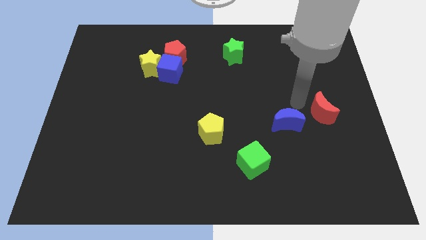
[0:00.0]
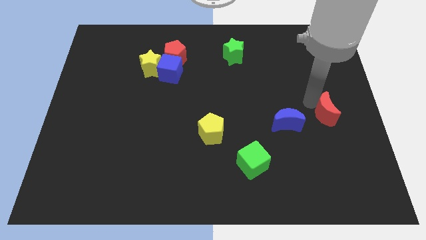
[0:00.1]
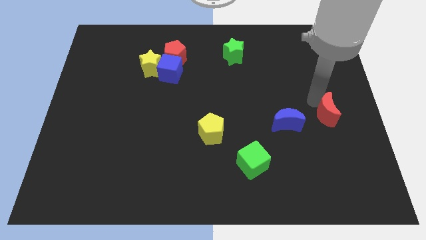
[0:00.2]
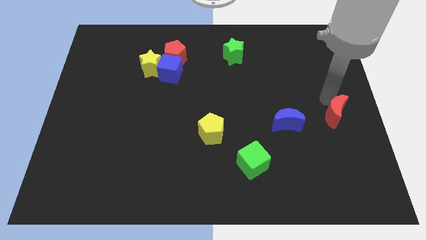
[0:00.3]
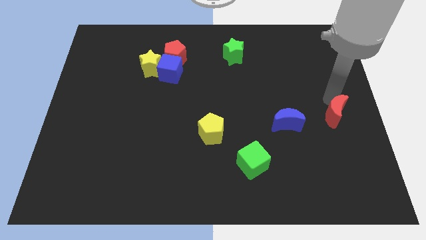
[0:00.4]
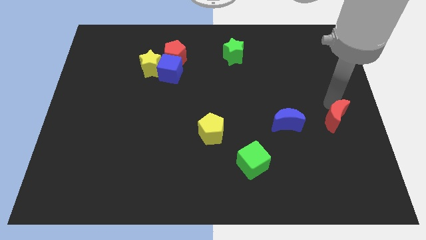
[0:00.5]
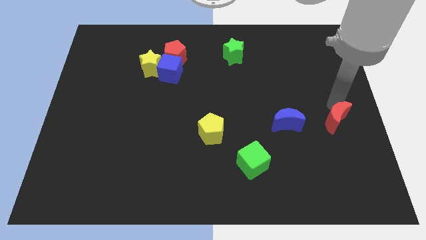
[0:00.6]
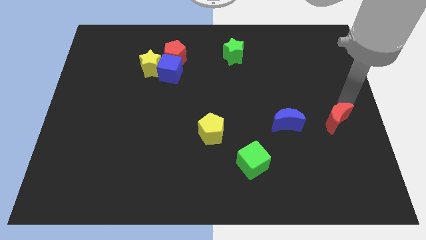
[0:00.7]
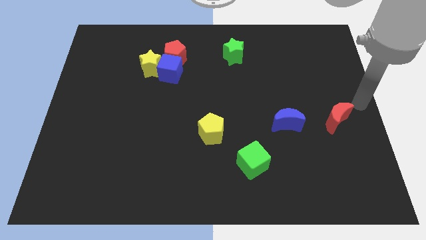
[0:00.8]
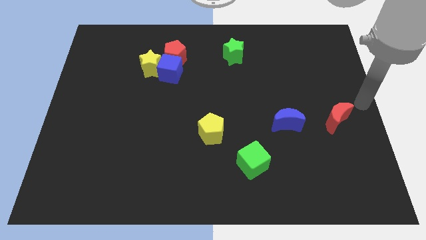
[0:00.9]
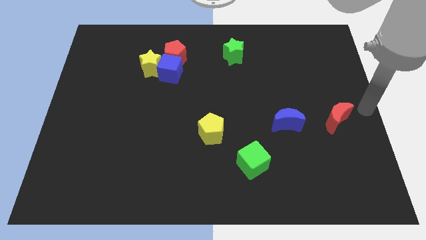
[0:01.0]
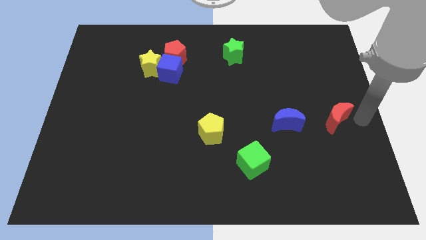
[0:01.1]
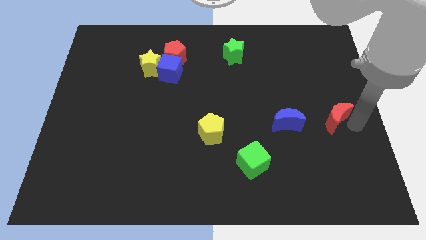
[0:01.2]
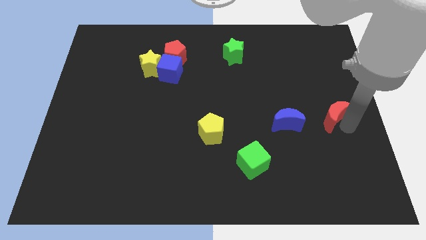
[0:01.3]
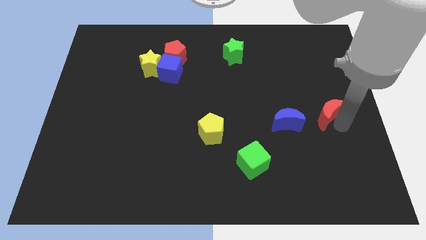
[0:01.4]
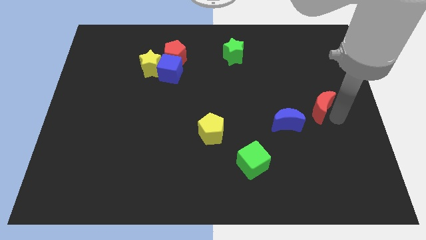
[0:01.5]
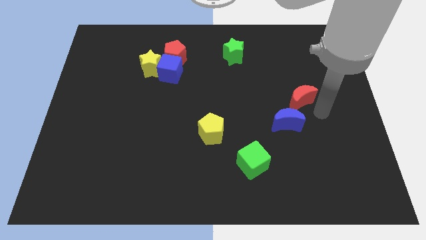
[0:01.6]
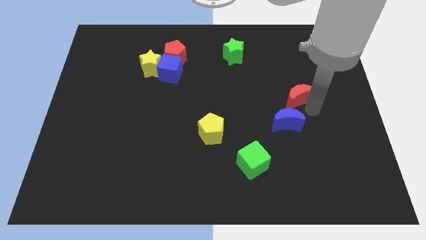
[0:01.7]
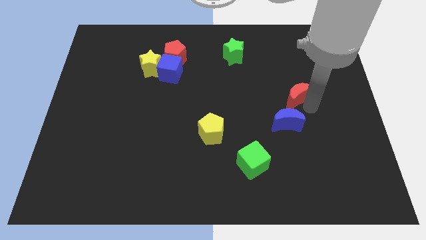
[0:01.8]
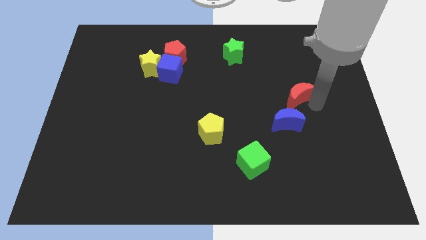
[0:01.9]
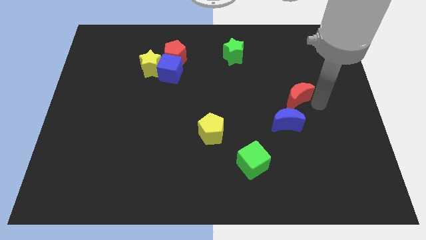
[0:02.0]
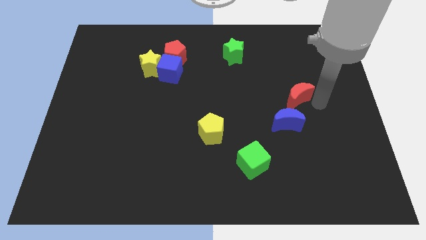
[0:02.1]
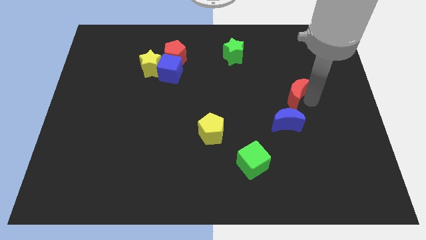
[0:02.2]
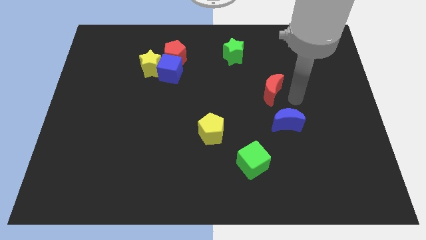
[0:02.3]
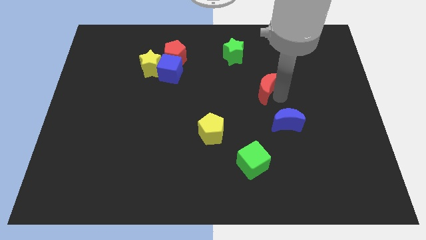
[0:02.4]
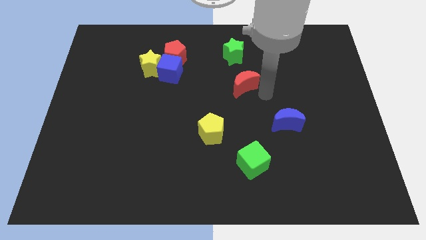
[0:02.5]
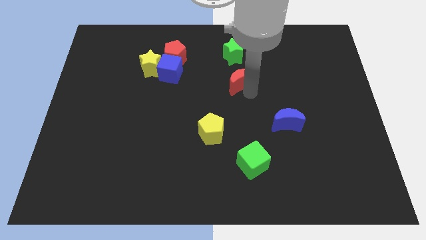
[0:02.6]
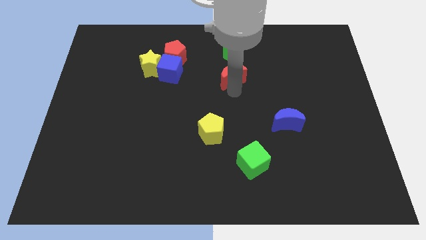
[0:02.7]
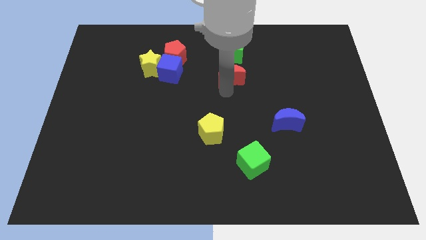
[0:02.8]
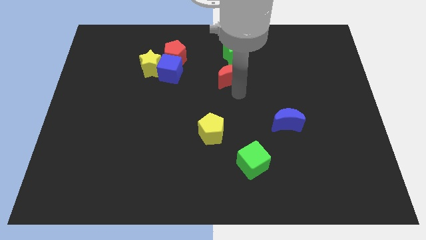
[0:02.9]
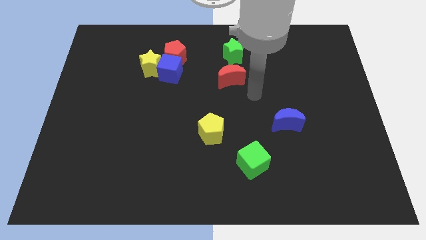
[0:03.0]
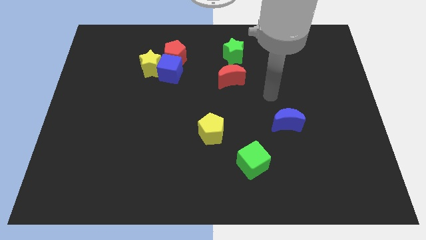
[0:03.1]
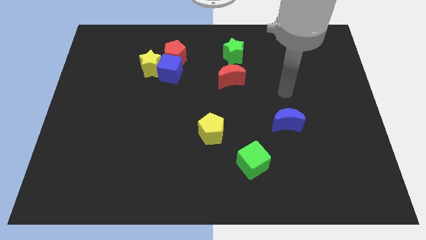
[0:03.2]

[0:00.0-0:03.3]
place red crescent below green star

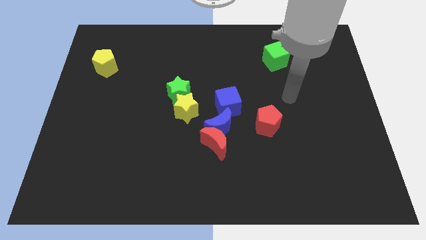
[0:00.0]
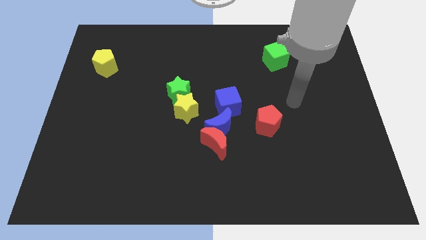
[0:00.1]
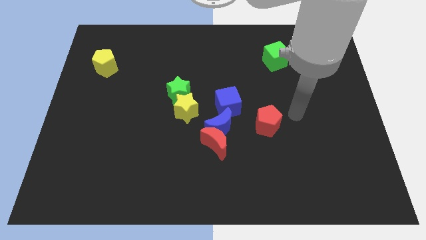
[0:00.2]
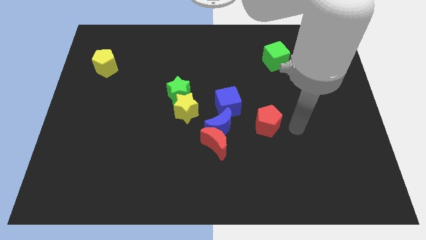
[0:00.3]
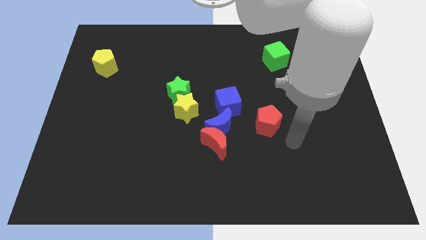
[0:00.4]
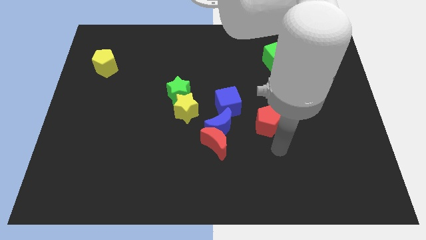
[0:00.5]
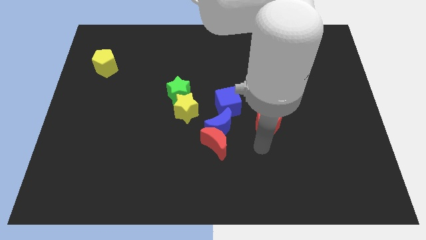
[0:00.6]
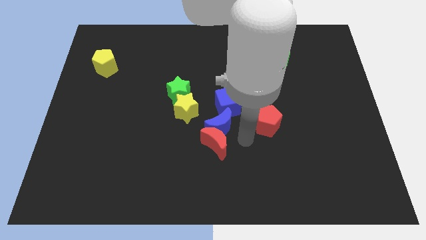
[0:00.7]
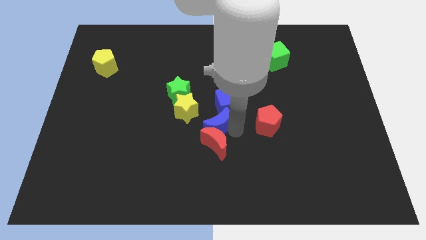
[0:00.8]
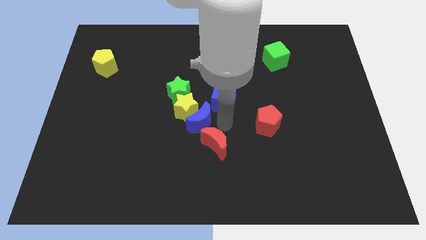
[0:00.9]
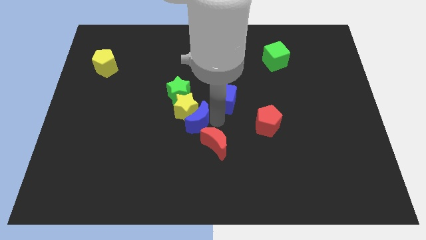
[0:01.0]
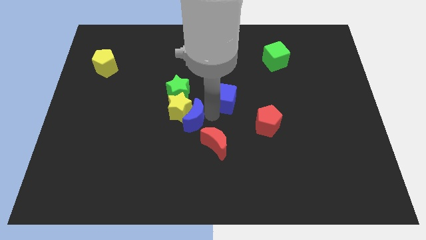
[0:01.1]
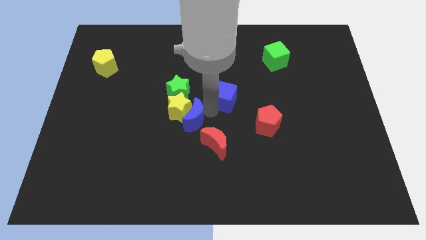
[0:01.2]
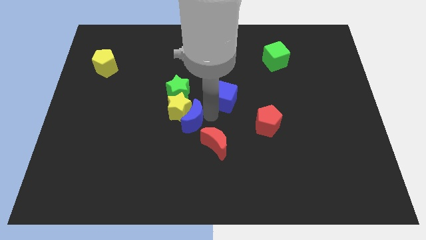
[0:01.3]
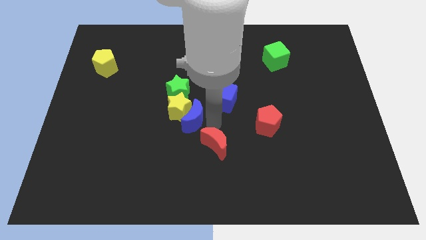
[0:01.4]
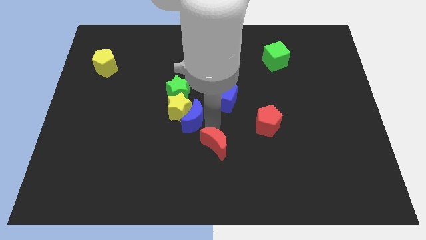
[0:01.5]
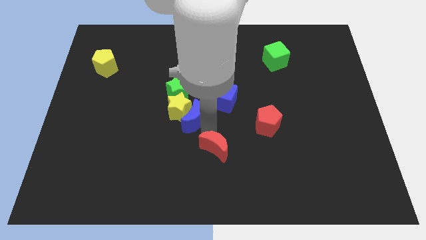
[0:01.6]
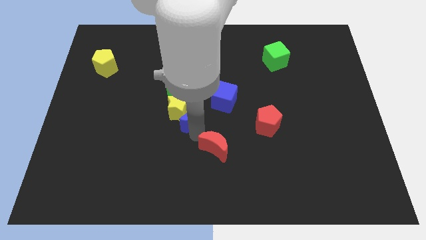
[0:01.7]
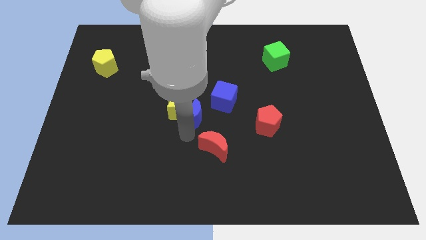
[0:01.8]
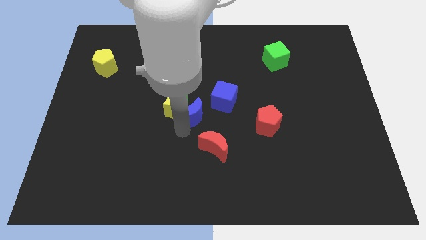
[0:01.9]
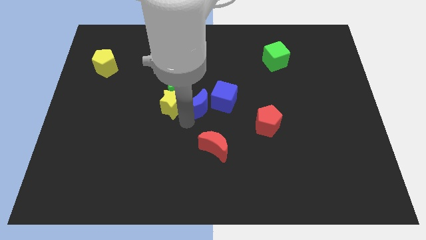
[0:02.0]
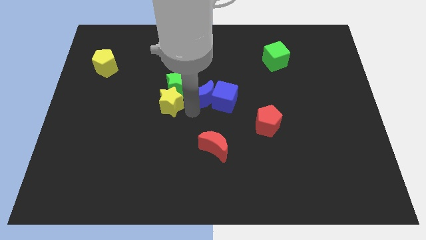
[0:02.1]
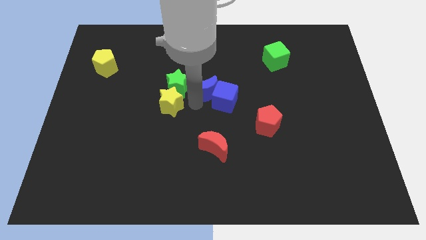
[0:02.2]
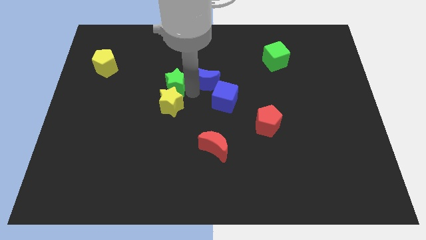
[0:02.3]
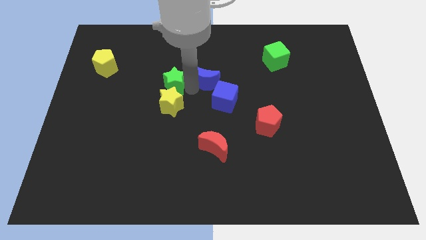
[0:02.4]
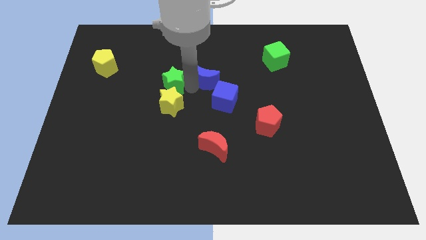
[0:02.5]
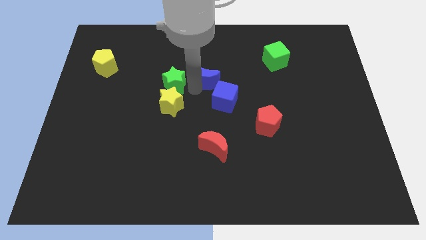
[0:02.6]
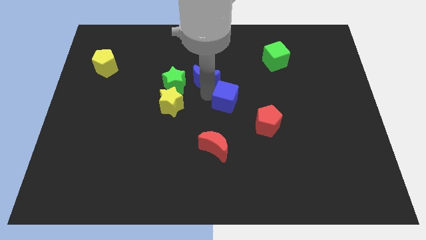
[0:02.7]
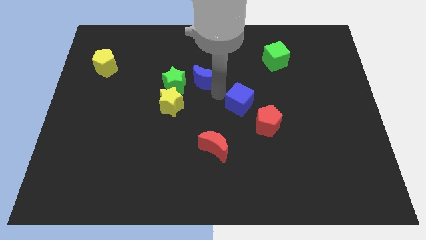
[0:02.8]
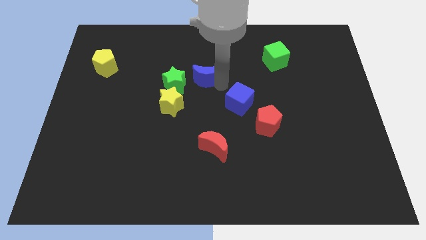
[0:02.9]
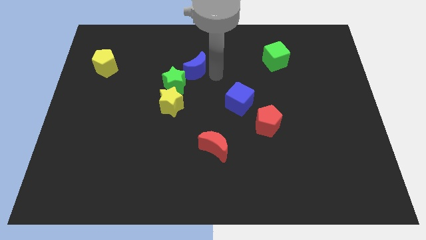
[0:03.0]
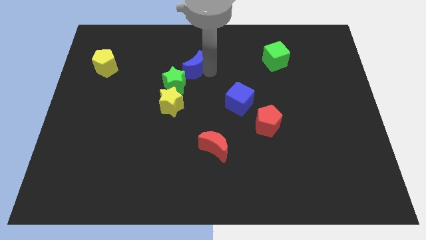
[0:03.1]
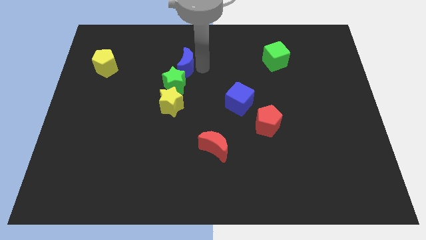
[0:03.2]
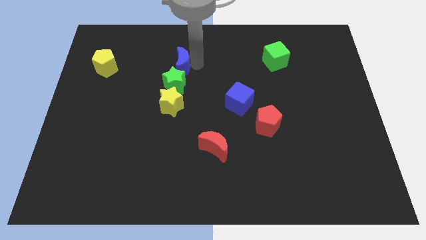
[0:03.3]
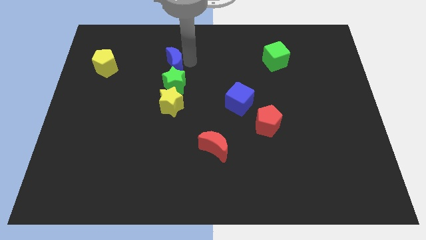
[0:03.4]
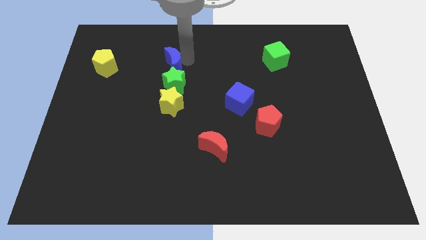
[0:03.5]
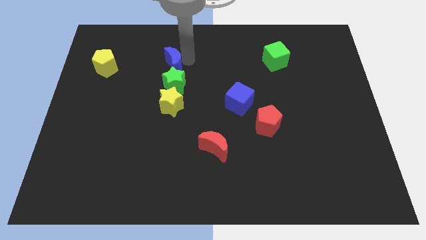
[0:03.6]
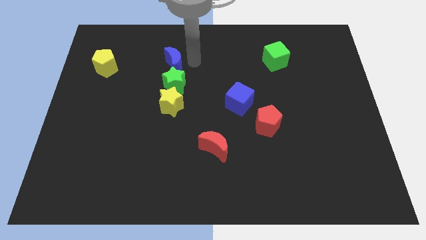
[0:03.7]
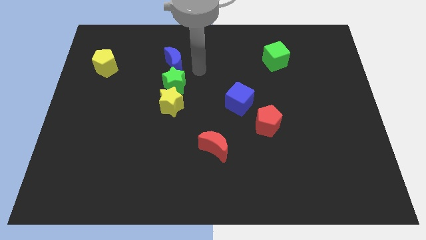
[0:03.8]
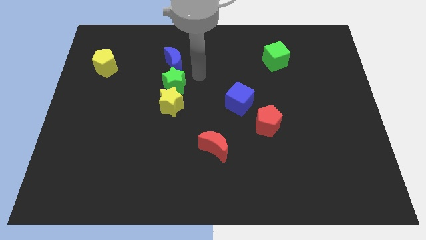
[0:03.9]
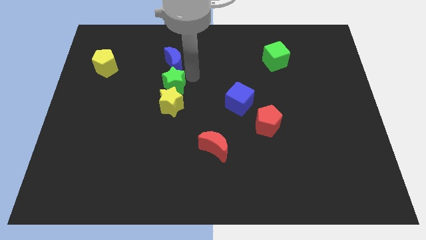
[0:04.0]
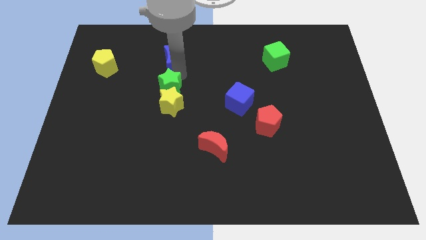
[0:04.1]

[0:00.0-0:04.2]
separate blue moon from the group of blocks

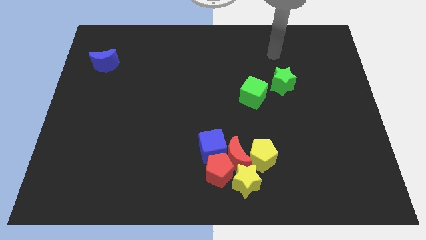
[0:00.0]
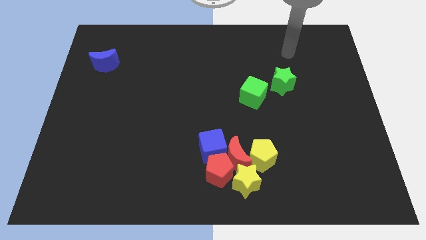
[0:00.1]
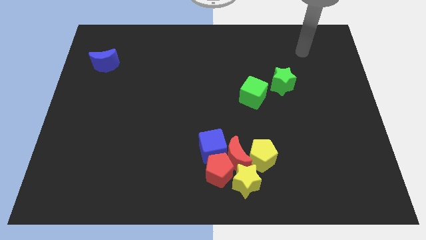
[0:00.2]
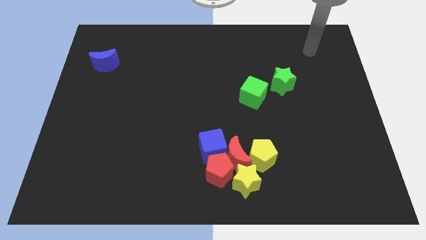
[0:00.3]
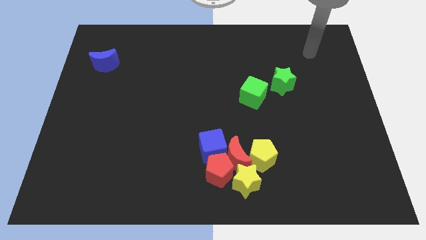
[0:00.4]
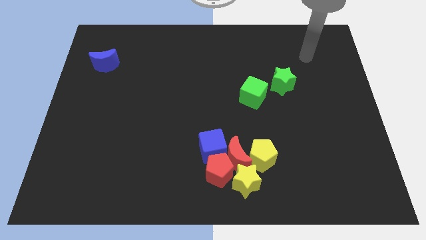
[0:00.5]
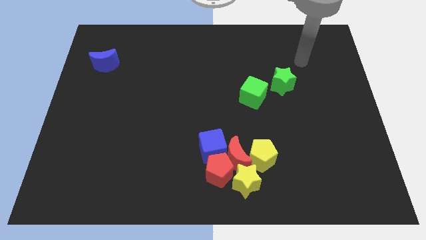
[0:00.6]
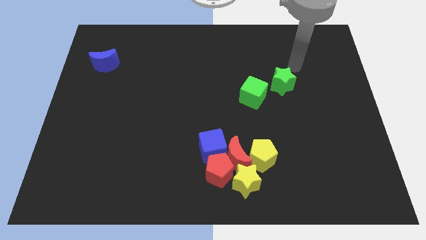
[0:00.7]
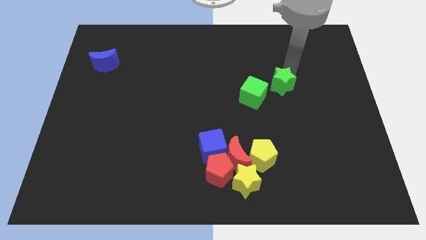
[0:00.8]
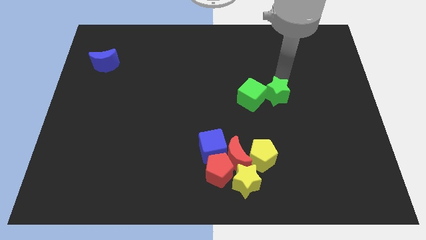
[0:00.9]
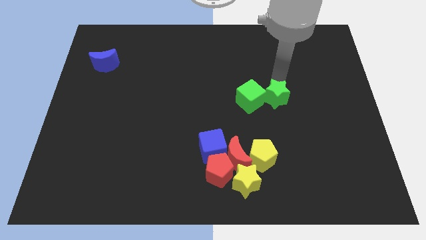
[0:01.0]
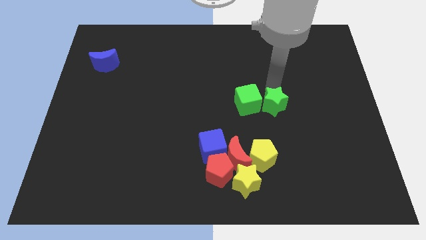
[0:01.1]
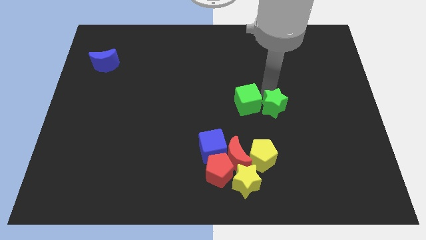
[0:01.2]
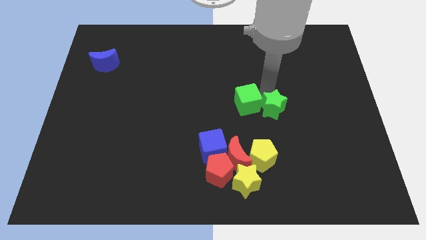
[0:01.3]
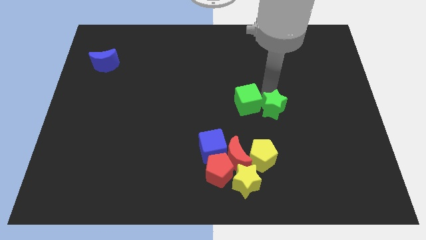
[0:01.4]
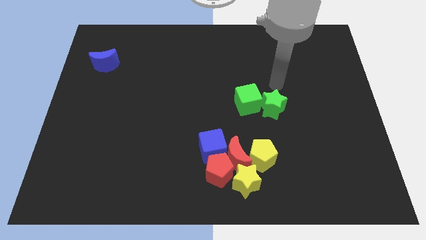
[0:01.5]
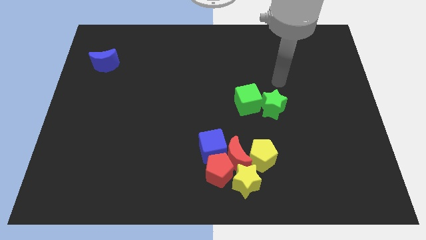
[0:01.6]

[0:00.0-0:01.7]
push the green star into the green cube
